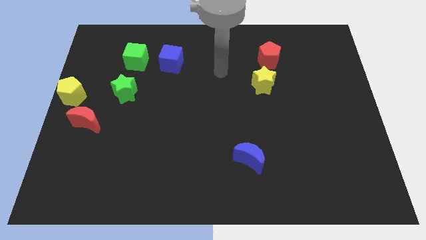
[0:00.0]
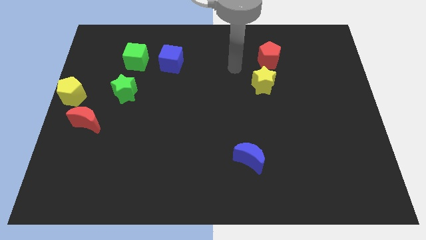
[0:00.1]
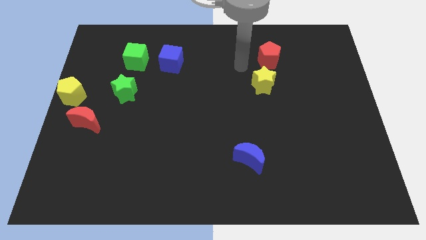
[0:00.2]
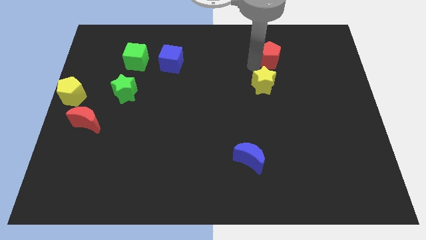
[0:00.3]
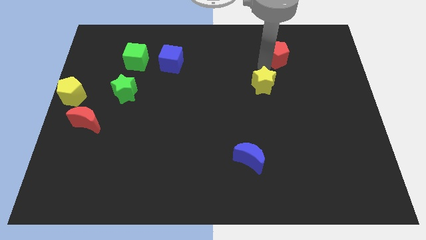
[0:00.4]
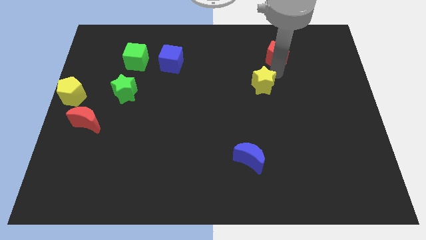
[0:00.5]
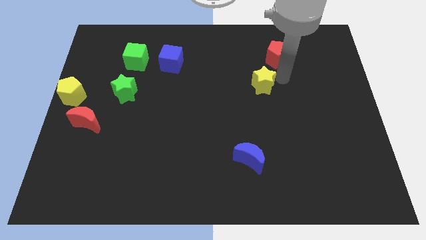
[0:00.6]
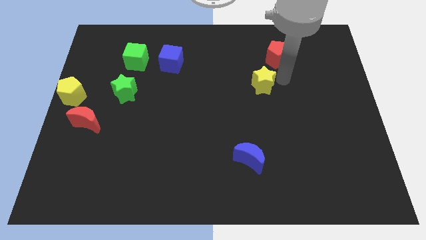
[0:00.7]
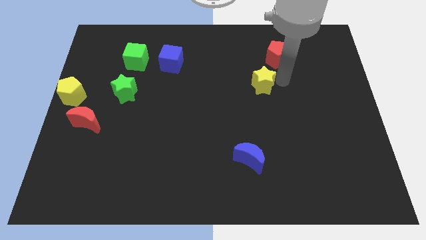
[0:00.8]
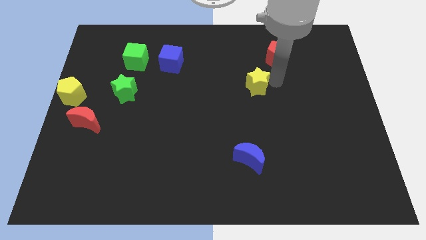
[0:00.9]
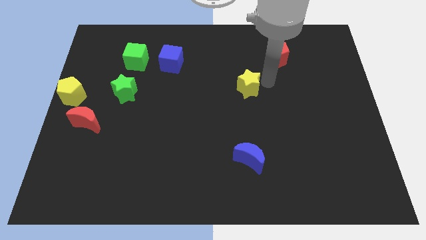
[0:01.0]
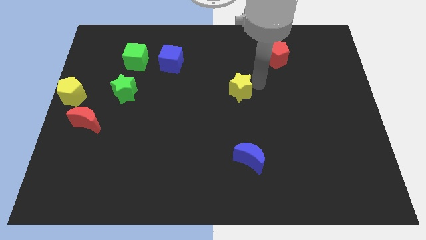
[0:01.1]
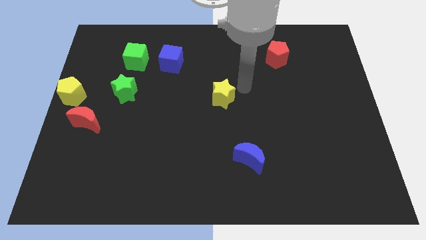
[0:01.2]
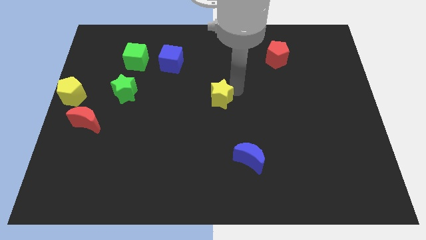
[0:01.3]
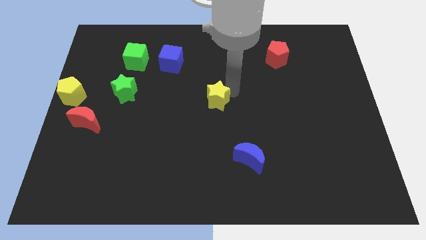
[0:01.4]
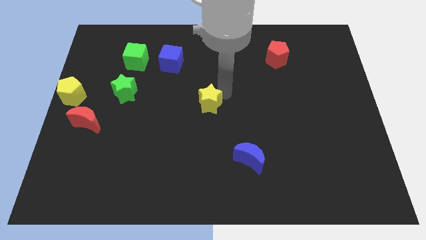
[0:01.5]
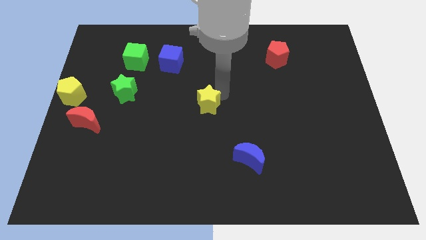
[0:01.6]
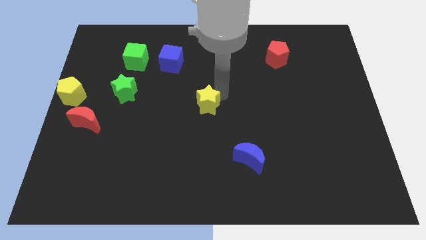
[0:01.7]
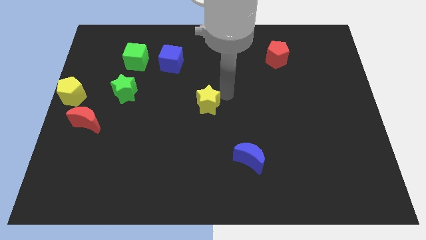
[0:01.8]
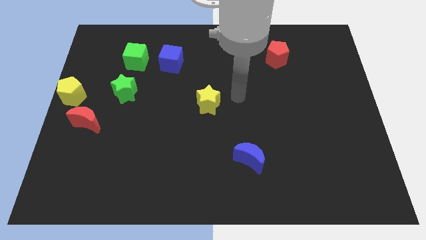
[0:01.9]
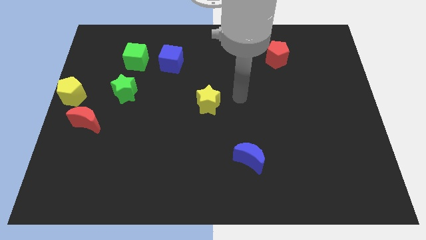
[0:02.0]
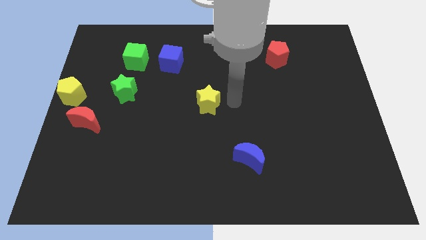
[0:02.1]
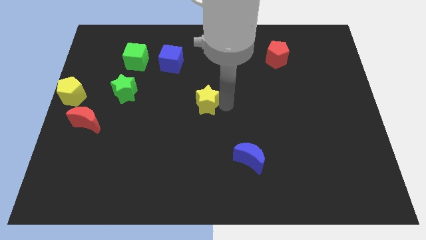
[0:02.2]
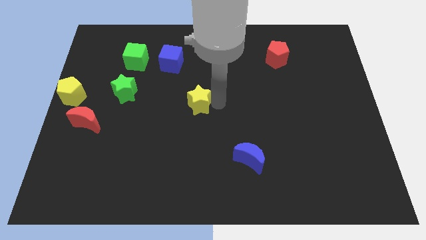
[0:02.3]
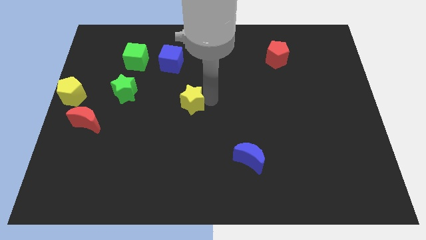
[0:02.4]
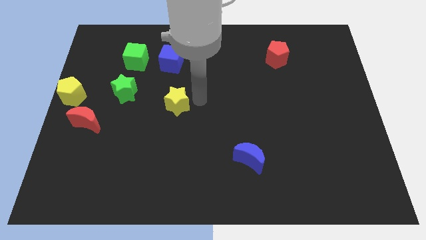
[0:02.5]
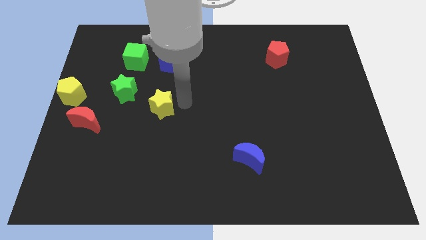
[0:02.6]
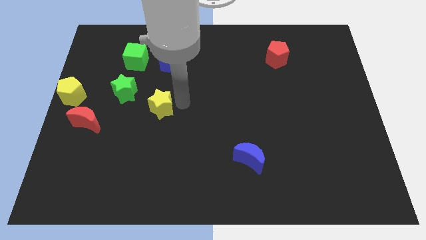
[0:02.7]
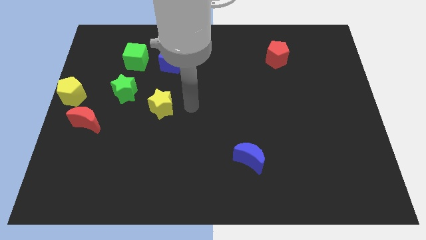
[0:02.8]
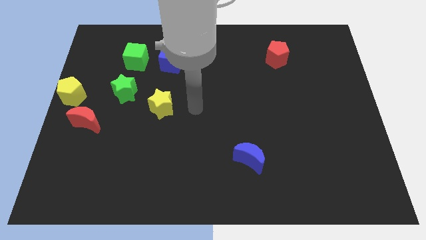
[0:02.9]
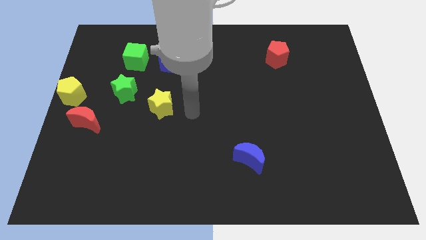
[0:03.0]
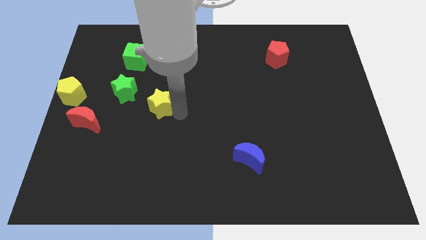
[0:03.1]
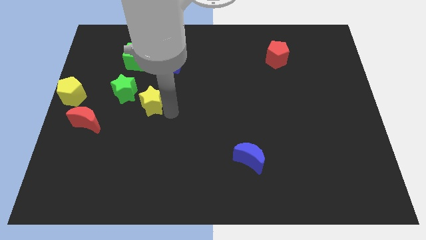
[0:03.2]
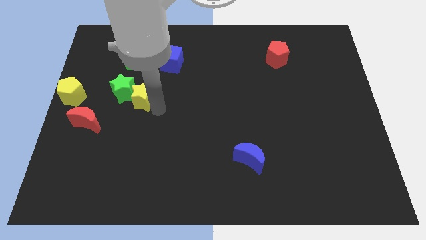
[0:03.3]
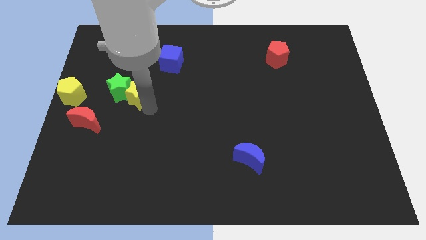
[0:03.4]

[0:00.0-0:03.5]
move the yellow star diagonal right of green star

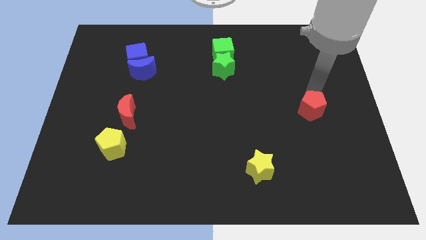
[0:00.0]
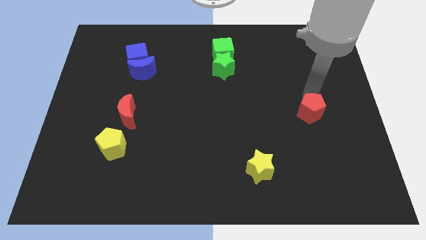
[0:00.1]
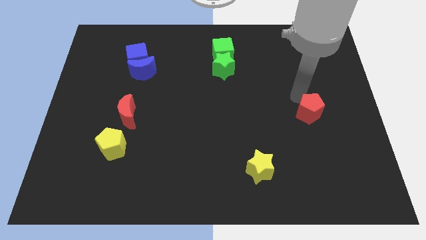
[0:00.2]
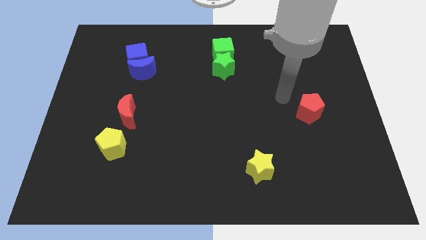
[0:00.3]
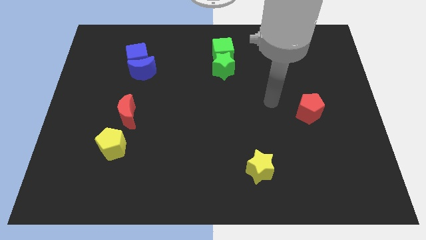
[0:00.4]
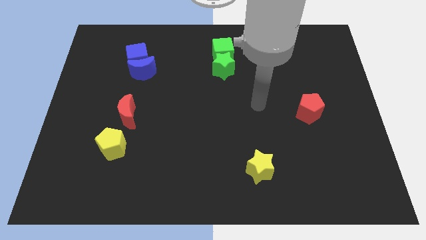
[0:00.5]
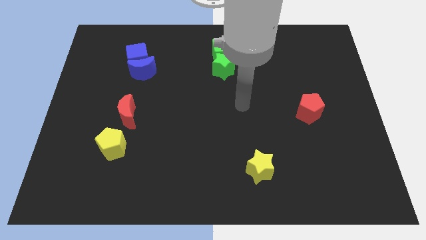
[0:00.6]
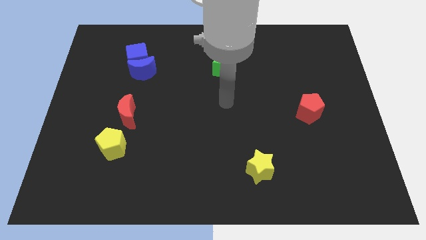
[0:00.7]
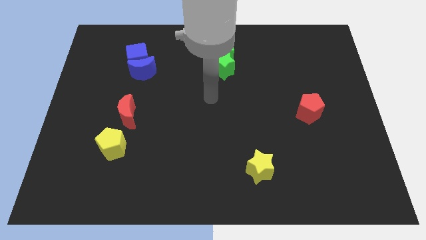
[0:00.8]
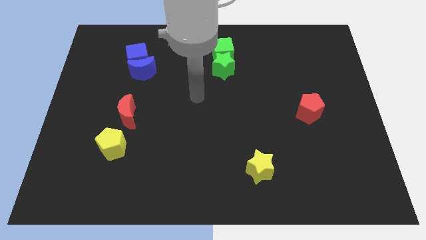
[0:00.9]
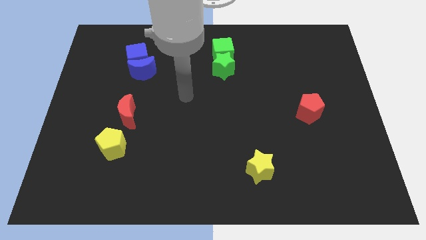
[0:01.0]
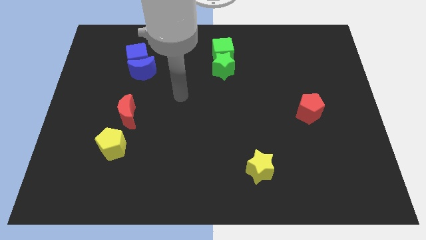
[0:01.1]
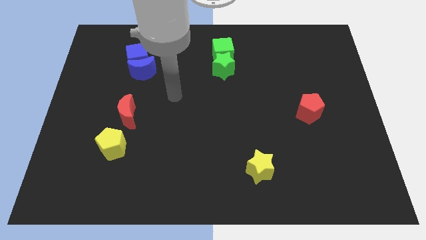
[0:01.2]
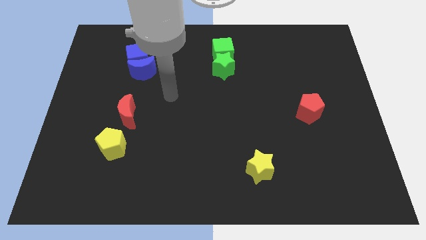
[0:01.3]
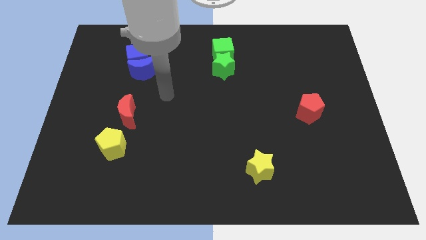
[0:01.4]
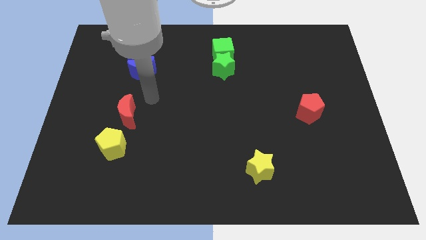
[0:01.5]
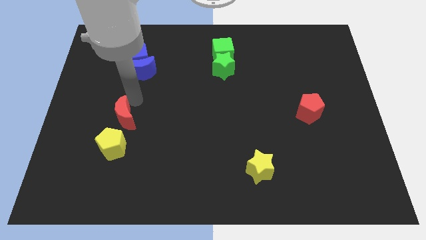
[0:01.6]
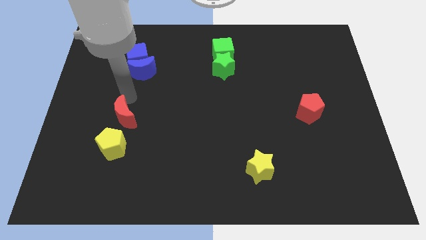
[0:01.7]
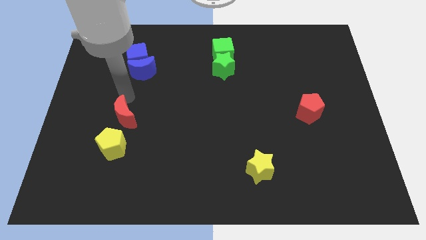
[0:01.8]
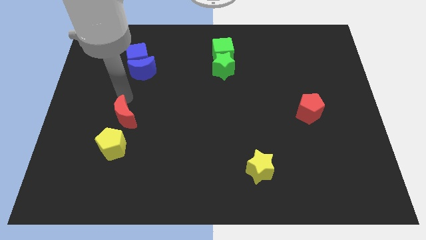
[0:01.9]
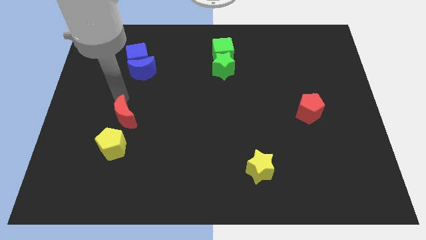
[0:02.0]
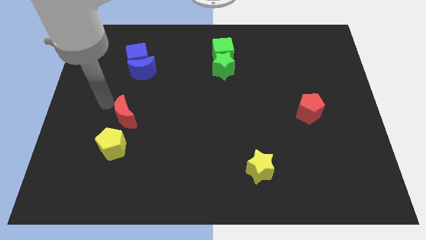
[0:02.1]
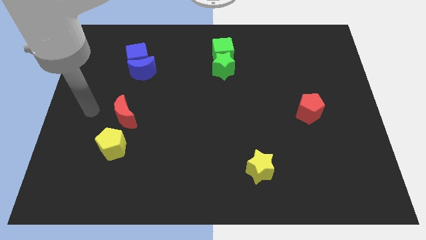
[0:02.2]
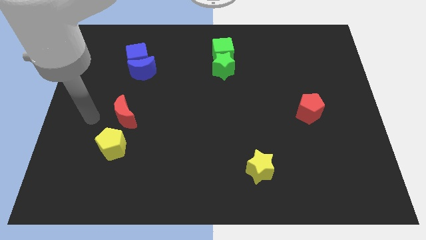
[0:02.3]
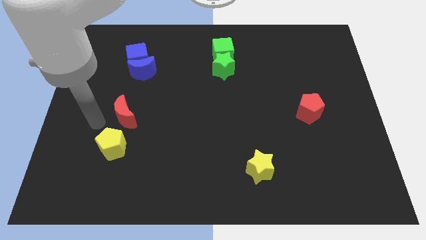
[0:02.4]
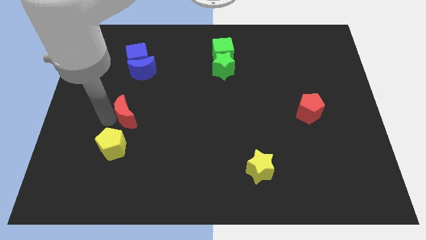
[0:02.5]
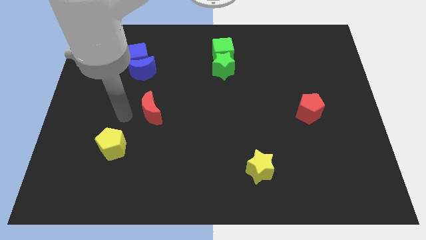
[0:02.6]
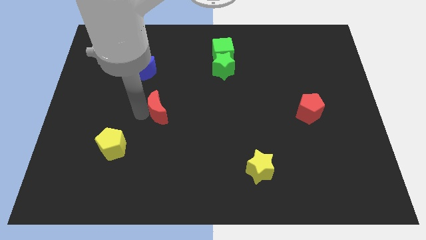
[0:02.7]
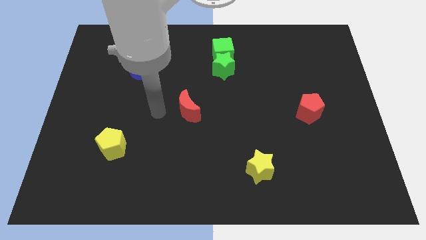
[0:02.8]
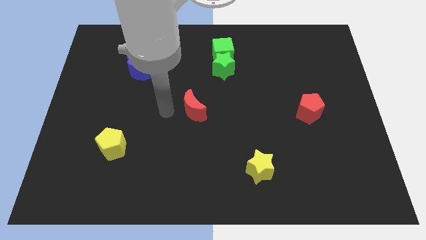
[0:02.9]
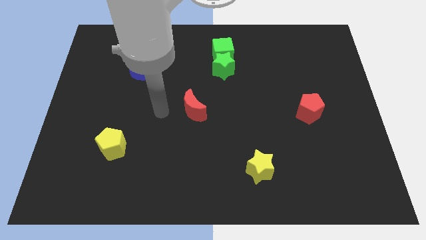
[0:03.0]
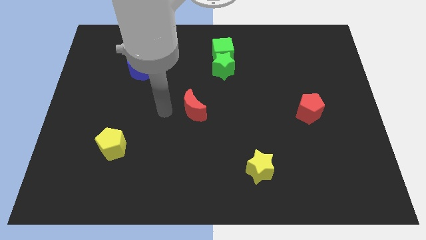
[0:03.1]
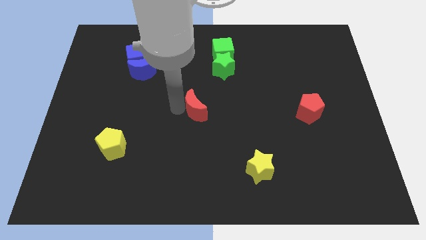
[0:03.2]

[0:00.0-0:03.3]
slide the red moon slightly to form a triangle with yellow blocks

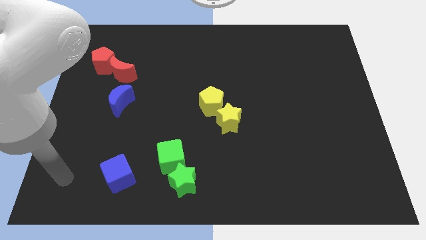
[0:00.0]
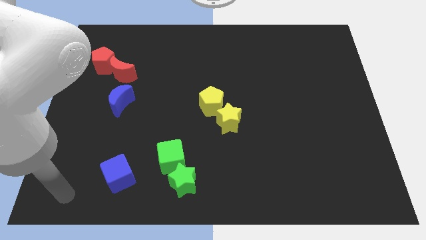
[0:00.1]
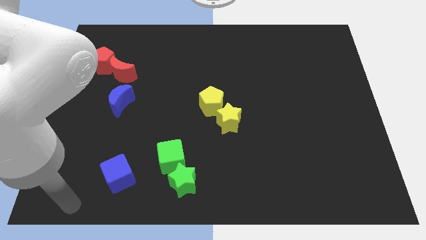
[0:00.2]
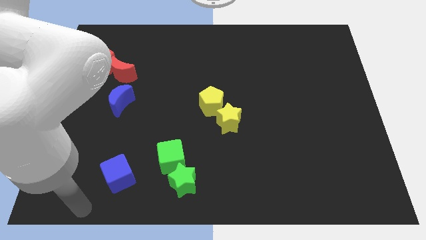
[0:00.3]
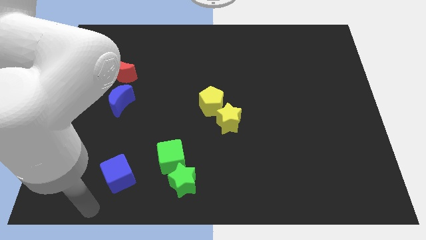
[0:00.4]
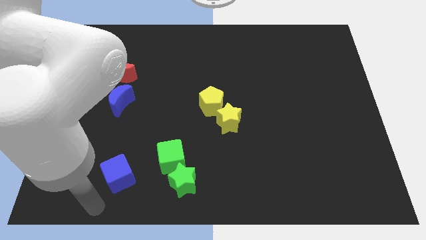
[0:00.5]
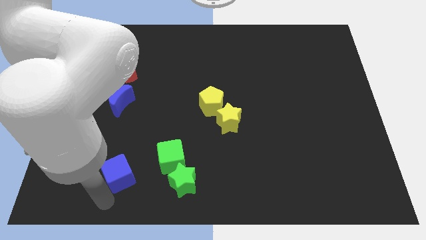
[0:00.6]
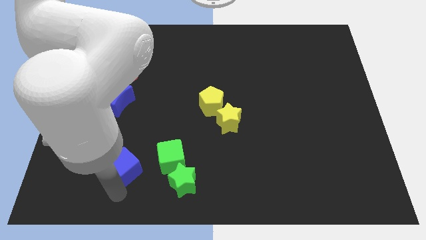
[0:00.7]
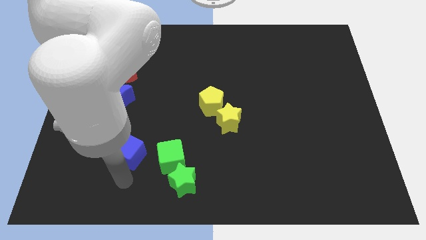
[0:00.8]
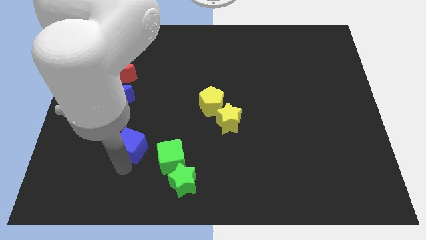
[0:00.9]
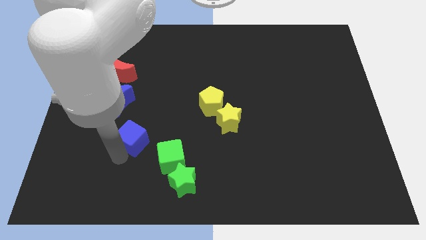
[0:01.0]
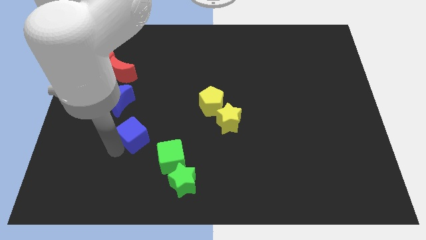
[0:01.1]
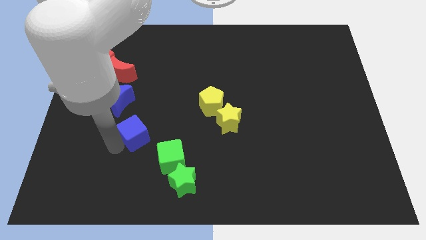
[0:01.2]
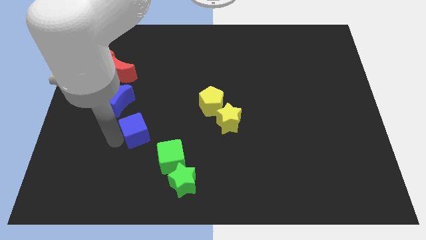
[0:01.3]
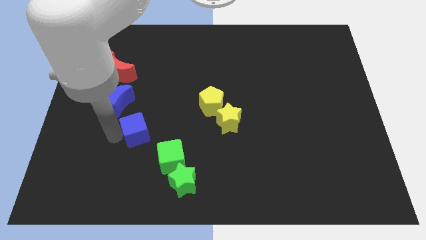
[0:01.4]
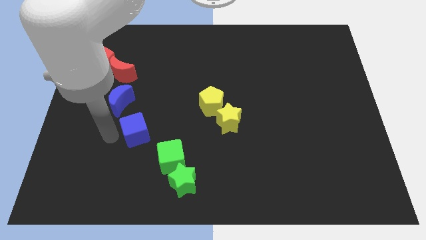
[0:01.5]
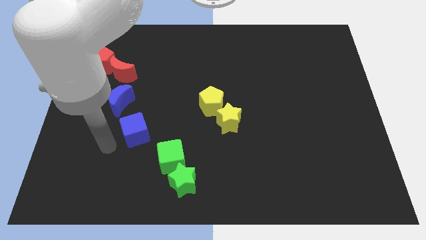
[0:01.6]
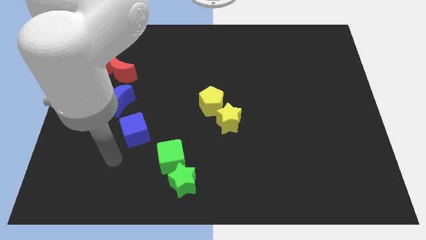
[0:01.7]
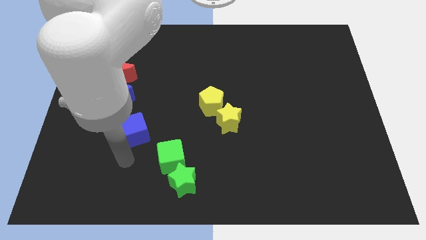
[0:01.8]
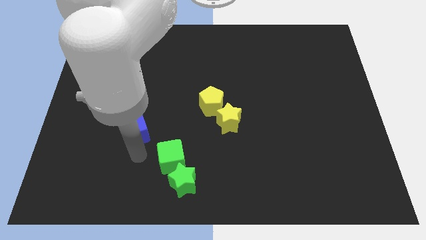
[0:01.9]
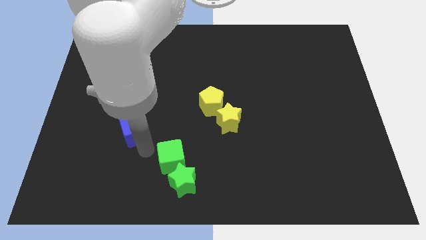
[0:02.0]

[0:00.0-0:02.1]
move the blue cube towards the top side

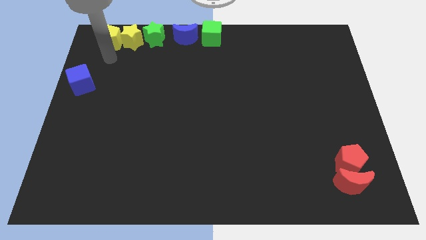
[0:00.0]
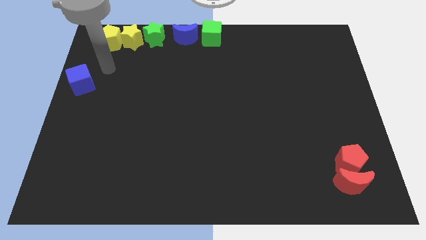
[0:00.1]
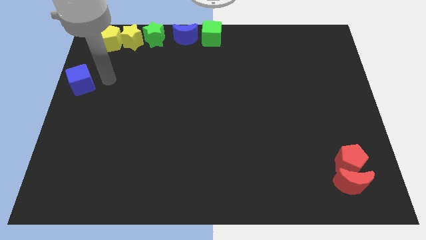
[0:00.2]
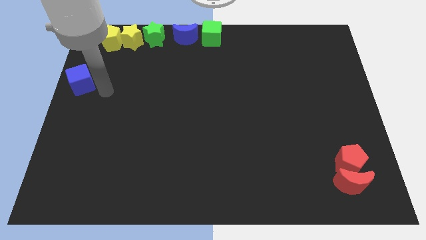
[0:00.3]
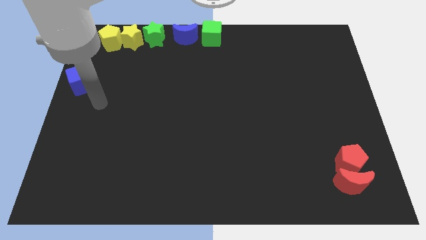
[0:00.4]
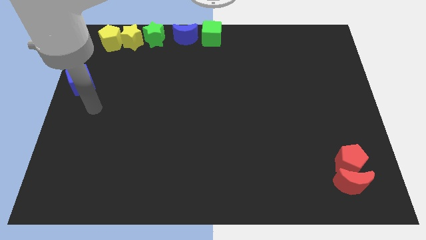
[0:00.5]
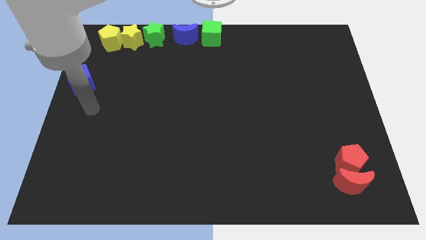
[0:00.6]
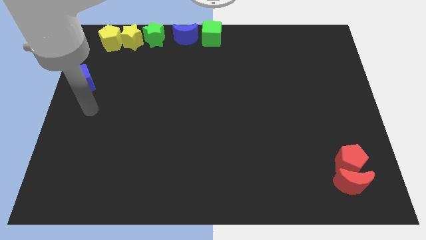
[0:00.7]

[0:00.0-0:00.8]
move the arm away from the yellow pentagon
